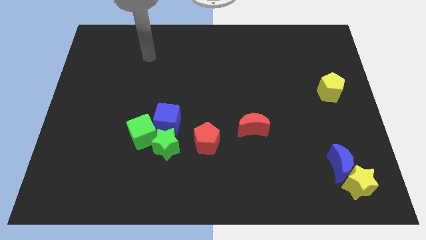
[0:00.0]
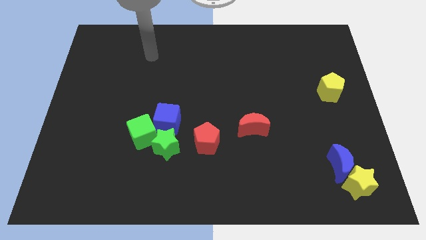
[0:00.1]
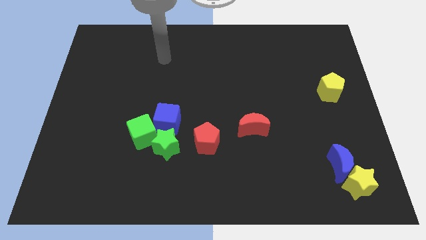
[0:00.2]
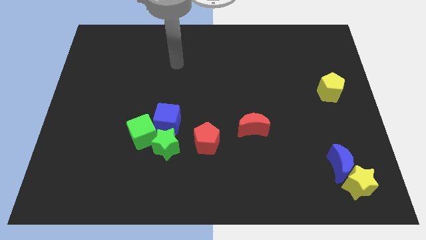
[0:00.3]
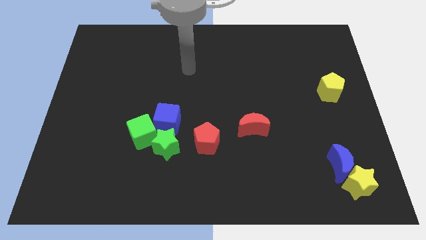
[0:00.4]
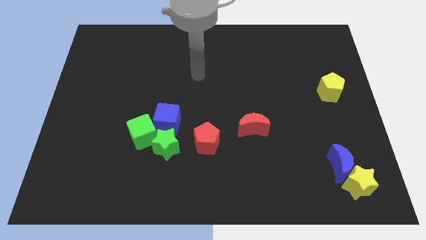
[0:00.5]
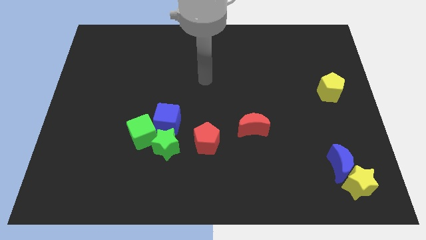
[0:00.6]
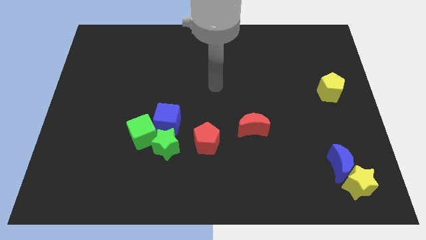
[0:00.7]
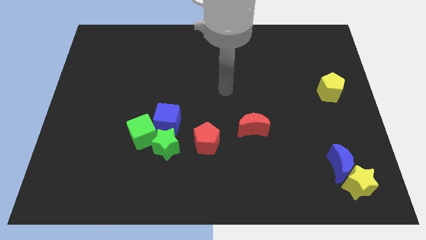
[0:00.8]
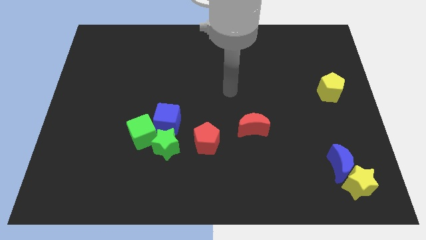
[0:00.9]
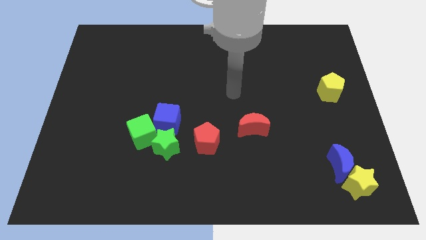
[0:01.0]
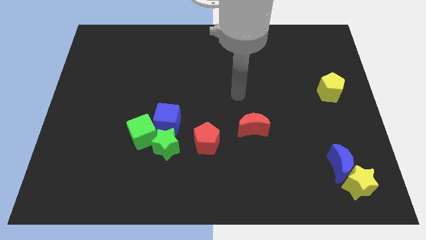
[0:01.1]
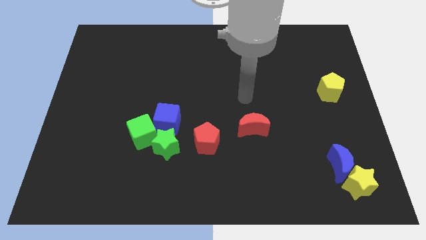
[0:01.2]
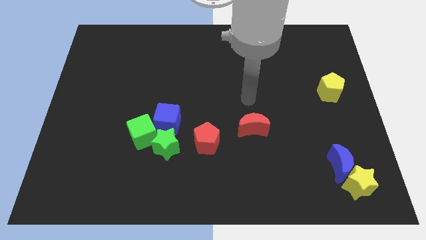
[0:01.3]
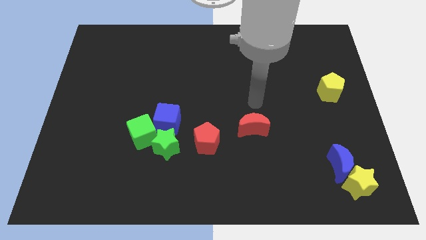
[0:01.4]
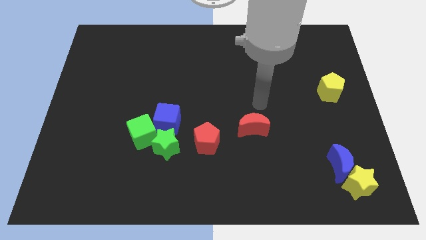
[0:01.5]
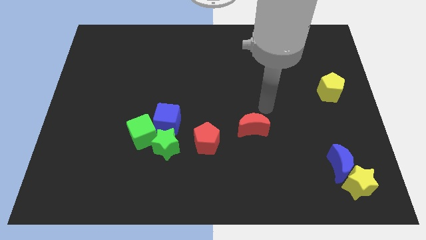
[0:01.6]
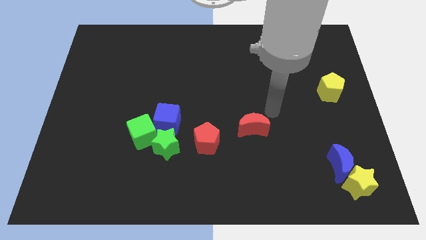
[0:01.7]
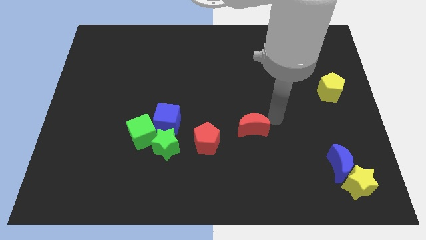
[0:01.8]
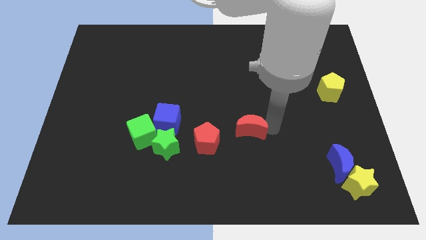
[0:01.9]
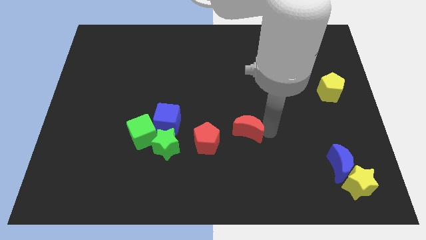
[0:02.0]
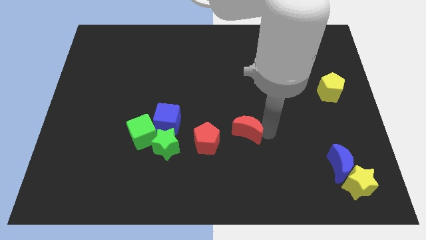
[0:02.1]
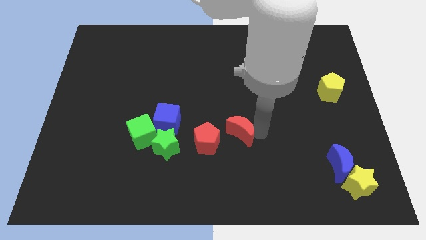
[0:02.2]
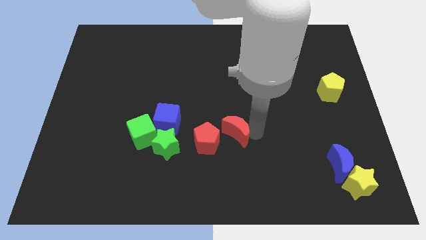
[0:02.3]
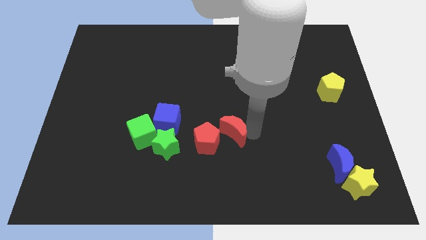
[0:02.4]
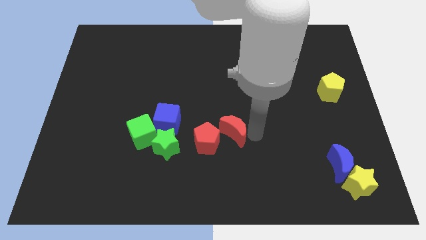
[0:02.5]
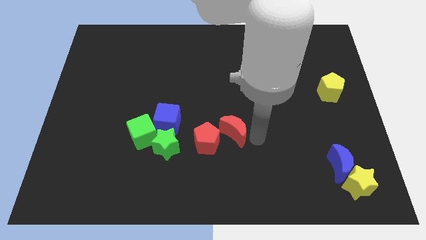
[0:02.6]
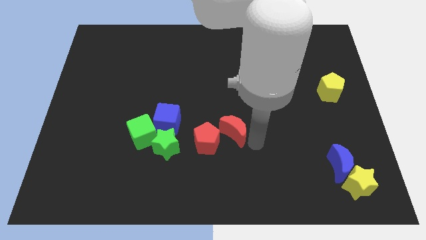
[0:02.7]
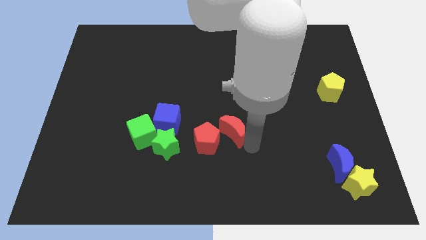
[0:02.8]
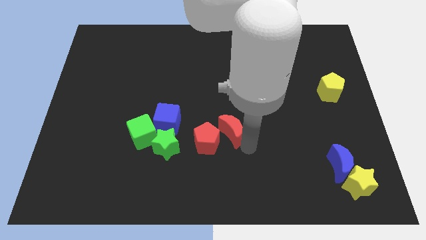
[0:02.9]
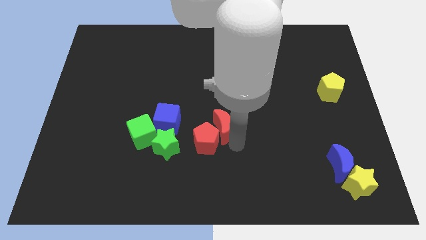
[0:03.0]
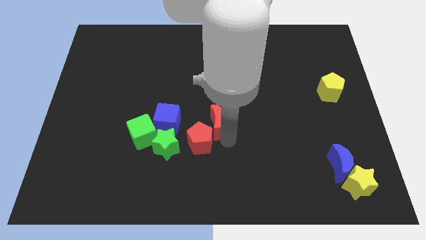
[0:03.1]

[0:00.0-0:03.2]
move the red moon into red pentagon

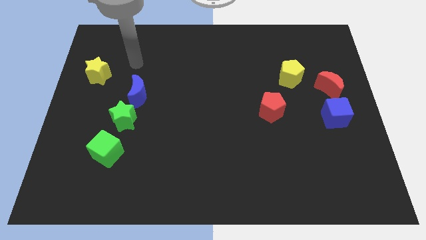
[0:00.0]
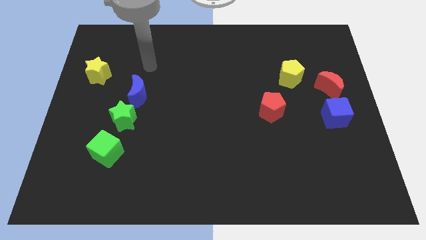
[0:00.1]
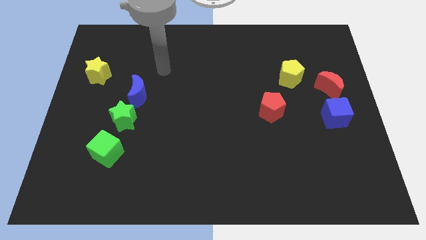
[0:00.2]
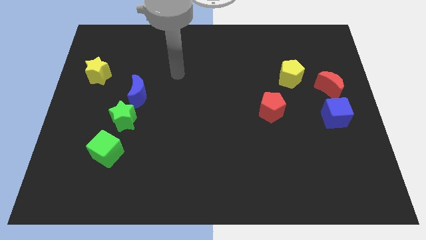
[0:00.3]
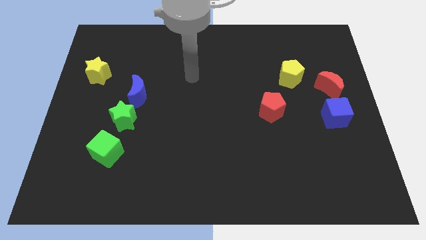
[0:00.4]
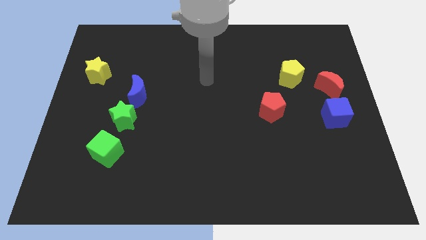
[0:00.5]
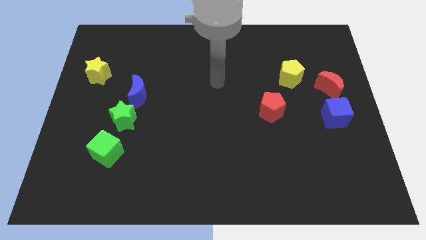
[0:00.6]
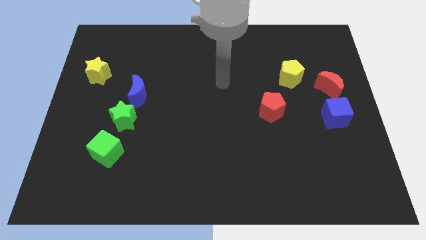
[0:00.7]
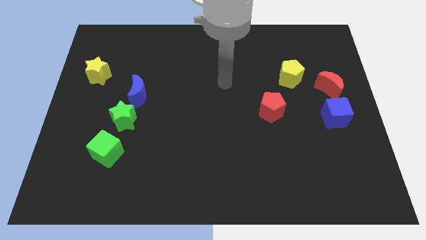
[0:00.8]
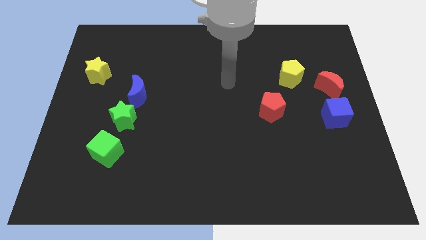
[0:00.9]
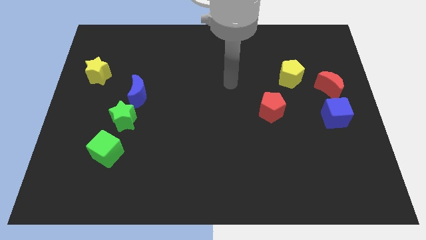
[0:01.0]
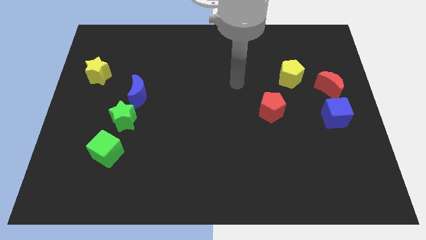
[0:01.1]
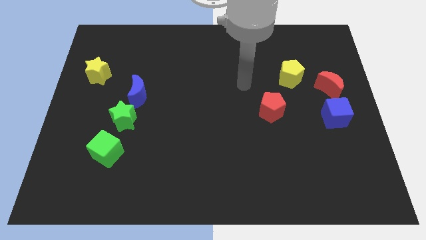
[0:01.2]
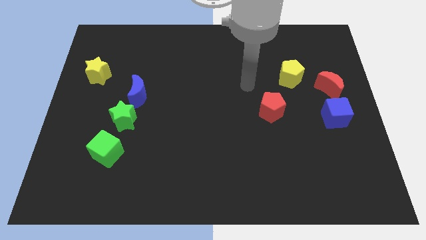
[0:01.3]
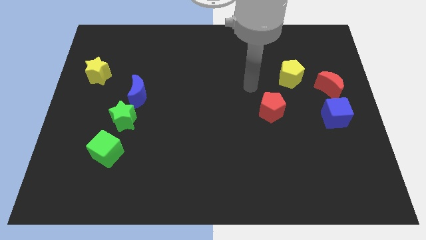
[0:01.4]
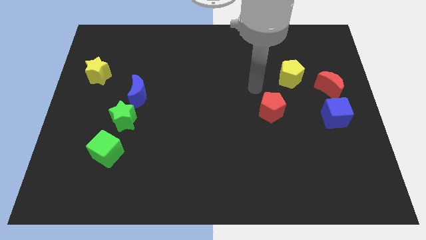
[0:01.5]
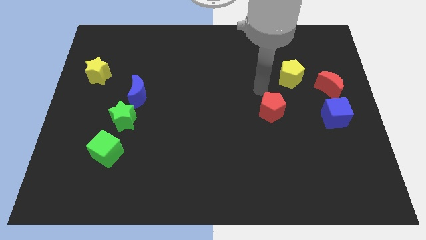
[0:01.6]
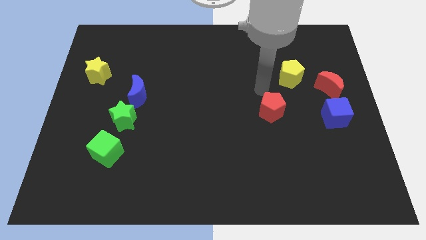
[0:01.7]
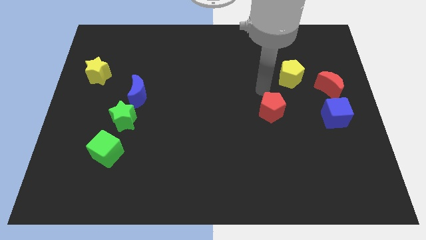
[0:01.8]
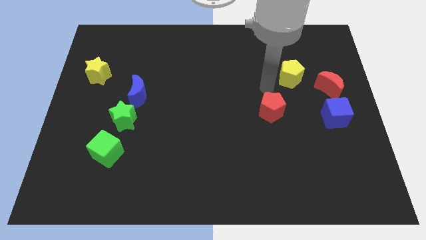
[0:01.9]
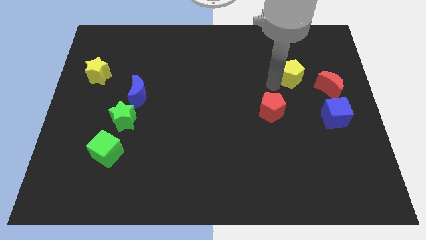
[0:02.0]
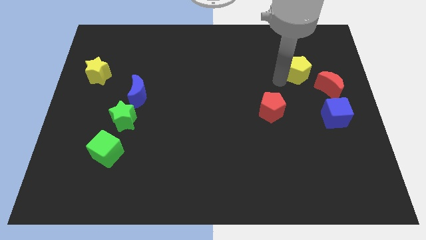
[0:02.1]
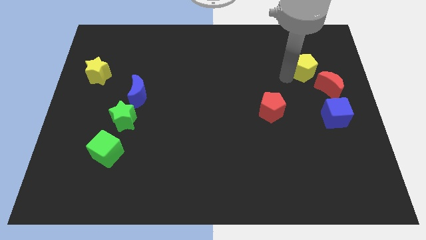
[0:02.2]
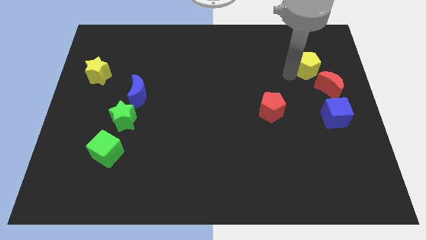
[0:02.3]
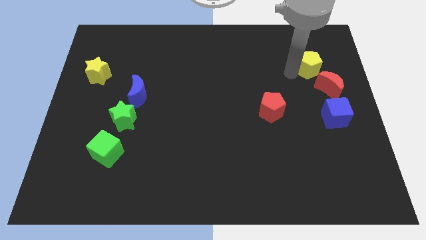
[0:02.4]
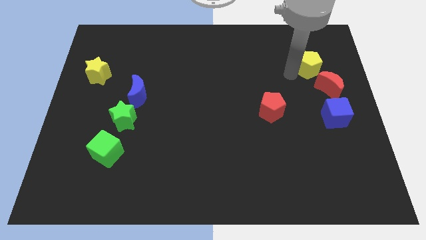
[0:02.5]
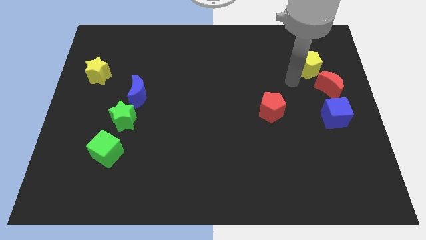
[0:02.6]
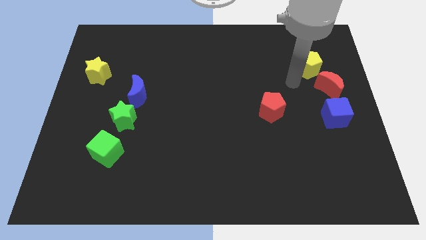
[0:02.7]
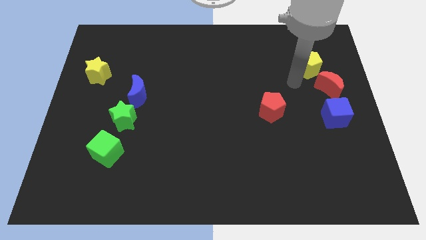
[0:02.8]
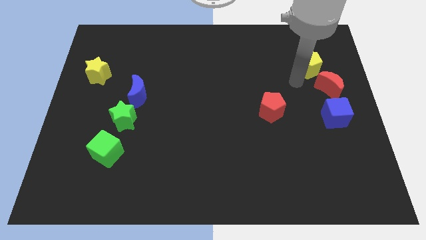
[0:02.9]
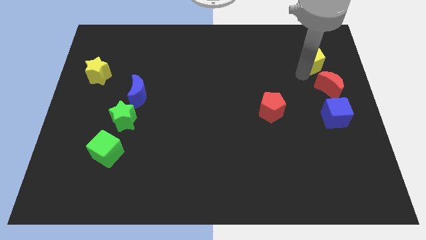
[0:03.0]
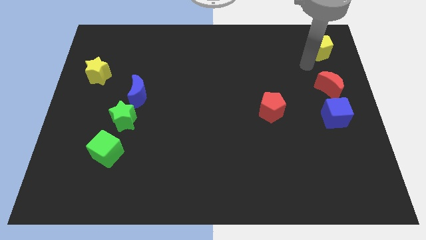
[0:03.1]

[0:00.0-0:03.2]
push the yellow pentagon above the red crescent

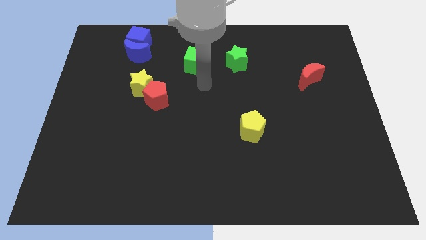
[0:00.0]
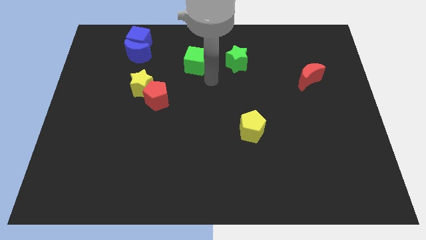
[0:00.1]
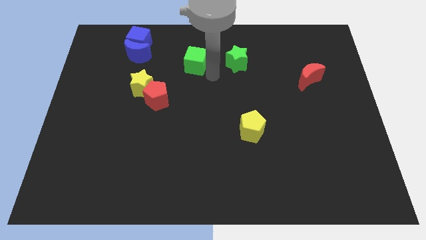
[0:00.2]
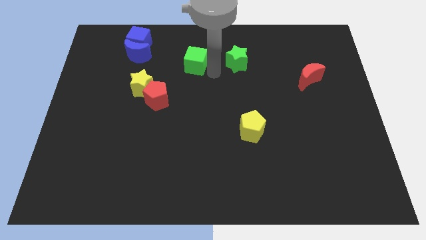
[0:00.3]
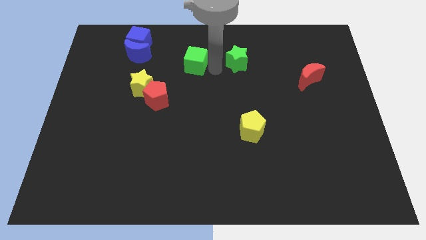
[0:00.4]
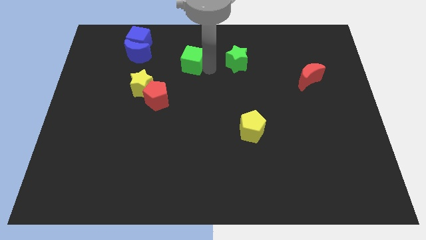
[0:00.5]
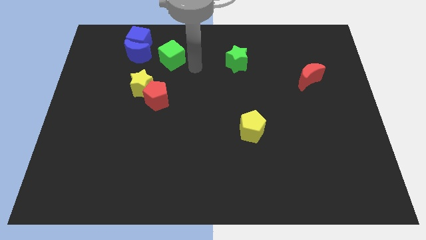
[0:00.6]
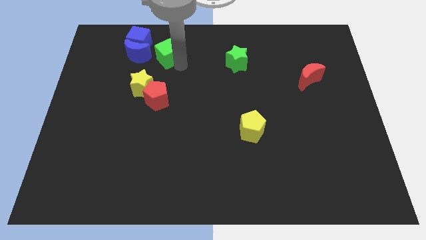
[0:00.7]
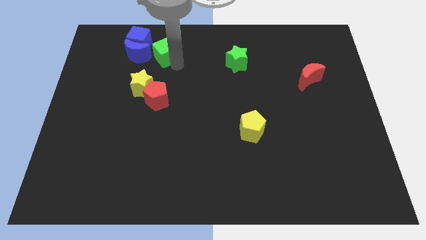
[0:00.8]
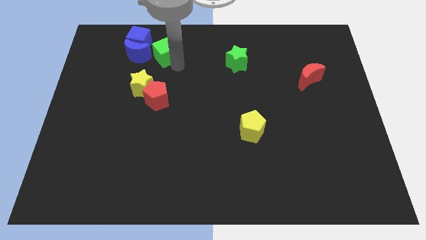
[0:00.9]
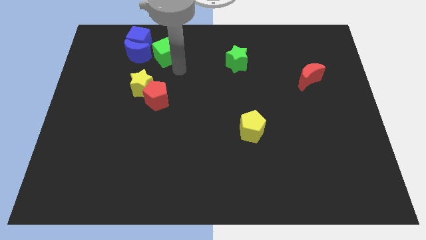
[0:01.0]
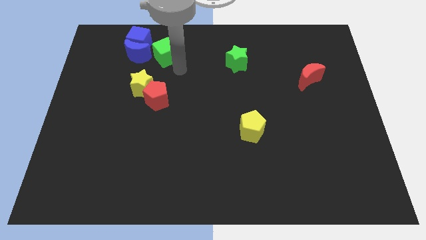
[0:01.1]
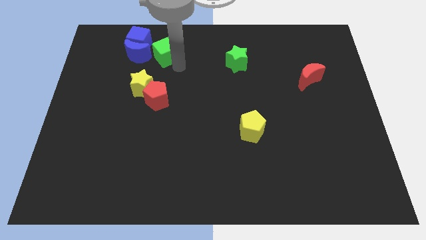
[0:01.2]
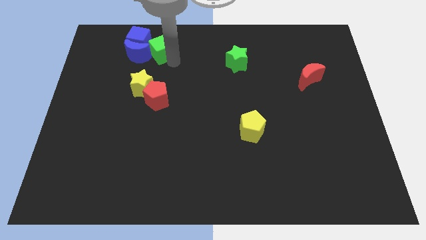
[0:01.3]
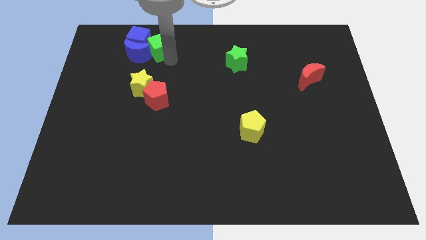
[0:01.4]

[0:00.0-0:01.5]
move the green cube to the right of the blue moon

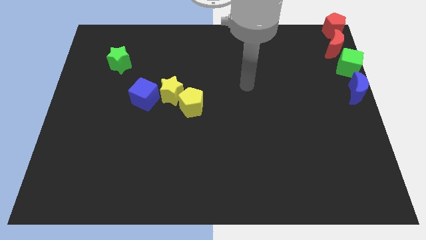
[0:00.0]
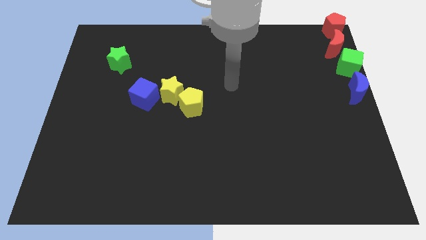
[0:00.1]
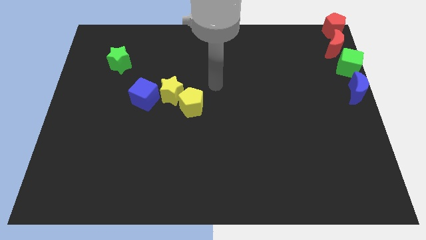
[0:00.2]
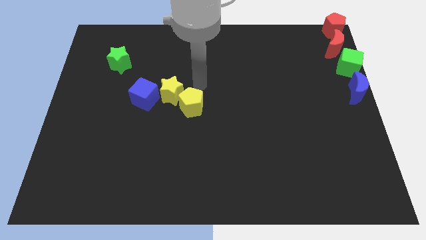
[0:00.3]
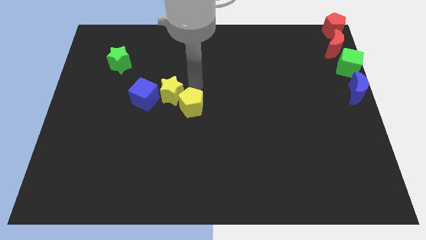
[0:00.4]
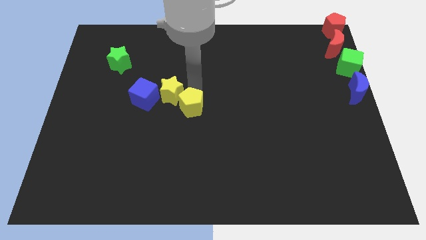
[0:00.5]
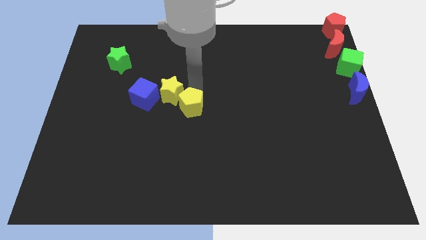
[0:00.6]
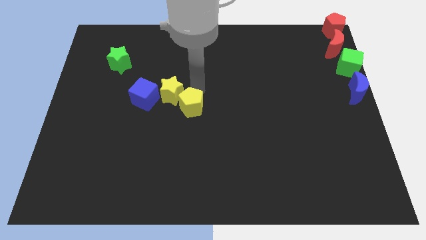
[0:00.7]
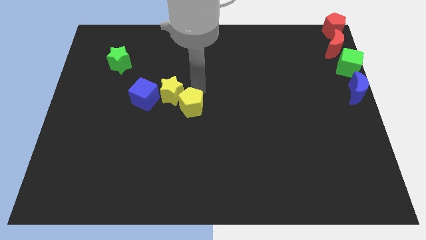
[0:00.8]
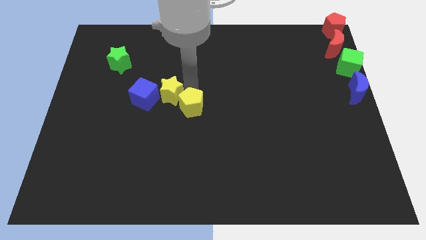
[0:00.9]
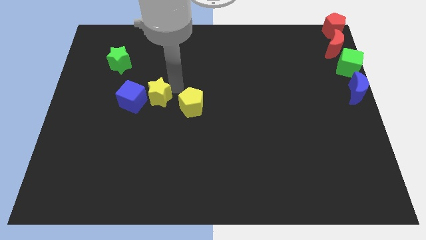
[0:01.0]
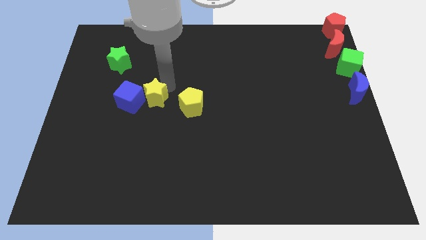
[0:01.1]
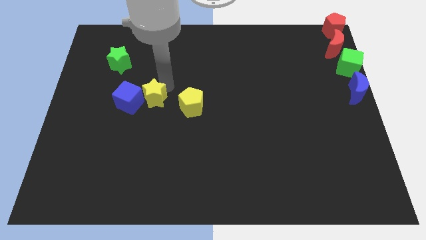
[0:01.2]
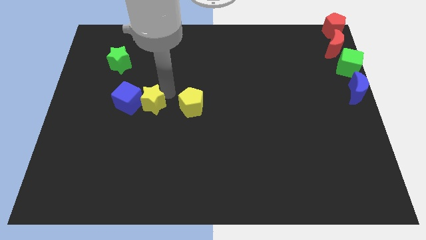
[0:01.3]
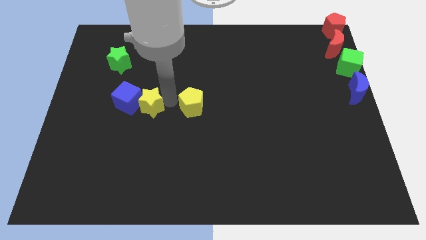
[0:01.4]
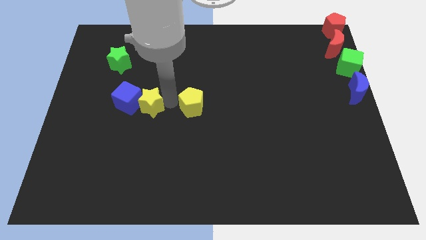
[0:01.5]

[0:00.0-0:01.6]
separate the yellow star and the yellow pentagon
